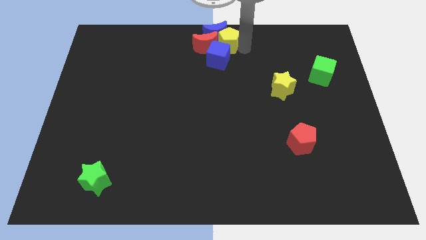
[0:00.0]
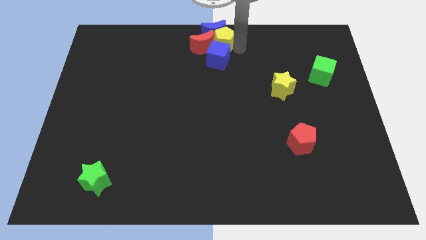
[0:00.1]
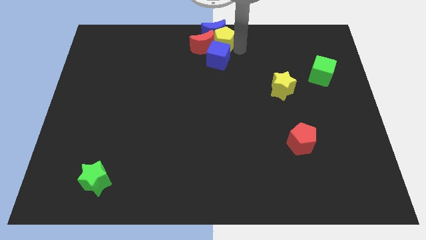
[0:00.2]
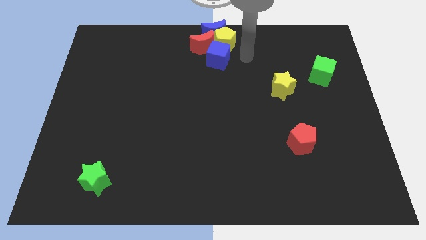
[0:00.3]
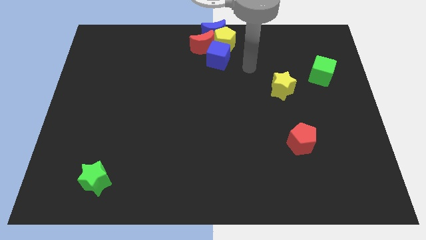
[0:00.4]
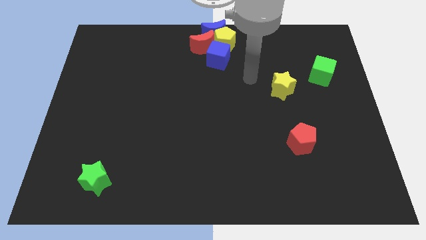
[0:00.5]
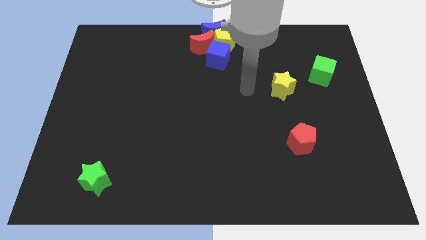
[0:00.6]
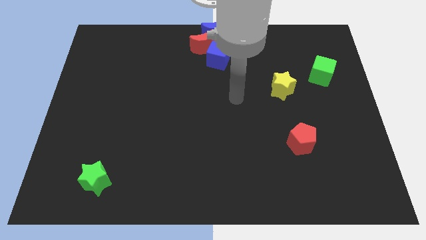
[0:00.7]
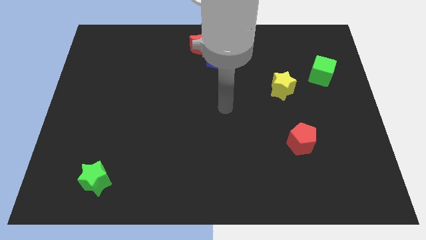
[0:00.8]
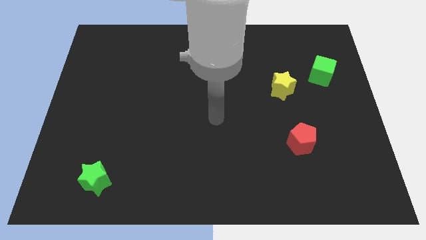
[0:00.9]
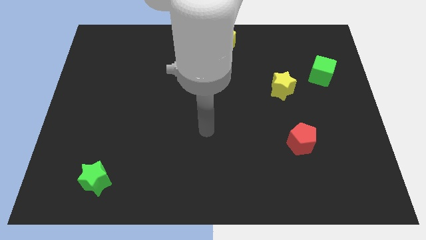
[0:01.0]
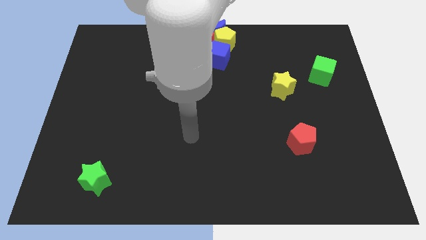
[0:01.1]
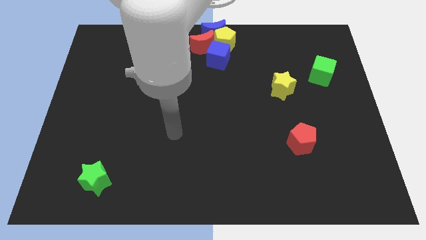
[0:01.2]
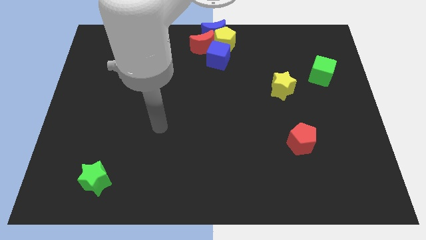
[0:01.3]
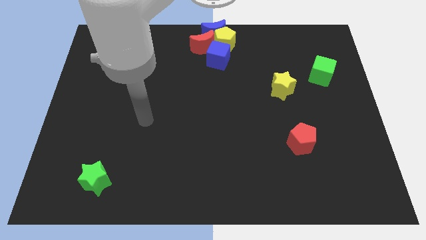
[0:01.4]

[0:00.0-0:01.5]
move your arm away from the yellow pentagon

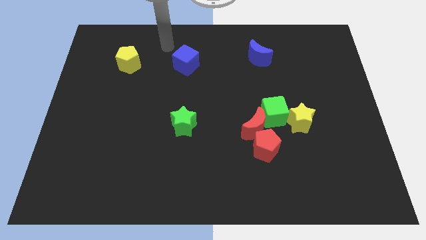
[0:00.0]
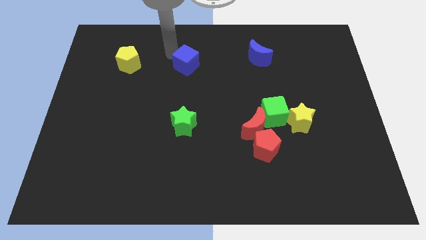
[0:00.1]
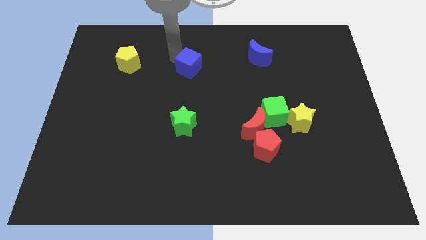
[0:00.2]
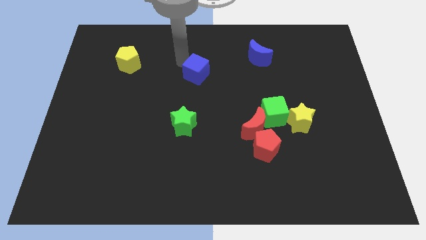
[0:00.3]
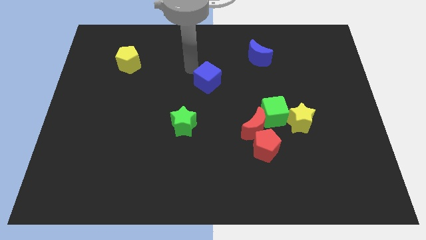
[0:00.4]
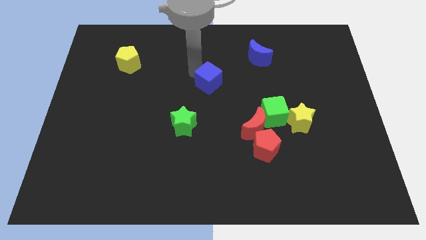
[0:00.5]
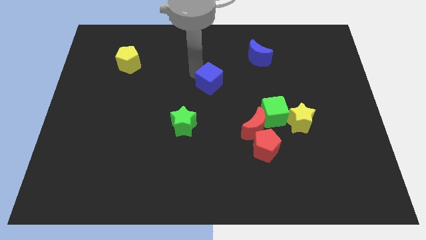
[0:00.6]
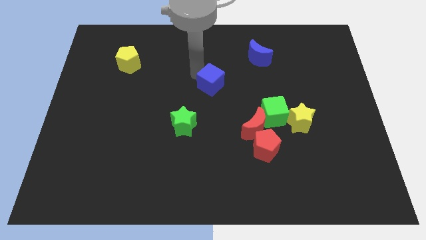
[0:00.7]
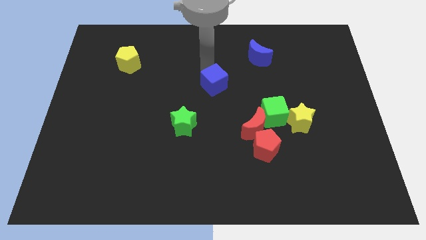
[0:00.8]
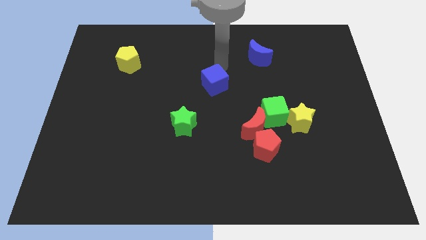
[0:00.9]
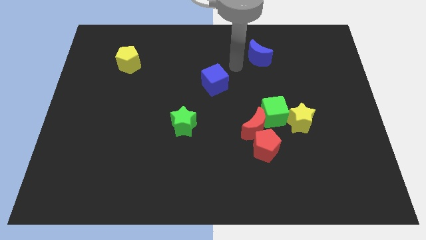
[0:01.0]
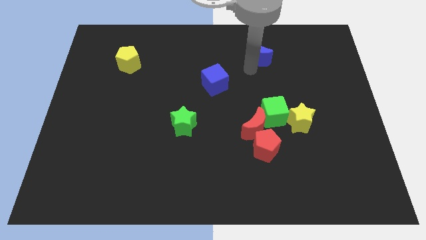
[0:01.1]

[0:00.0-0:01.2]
put the blue cube between the green star and blue moon

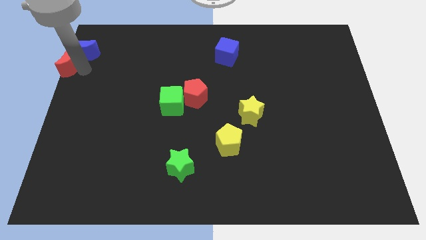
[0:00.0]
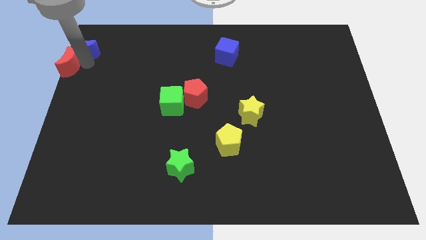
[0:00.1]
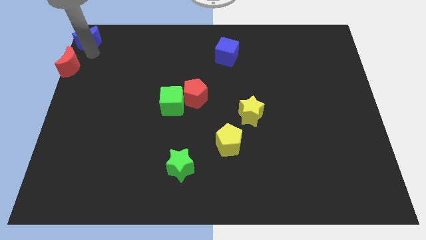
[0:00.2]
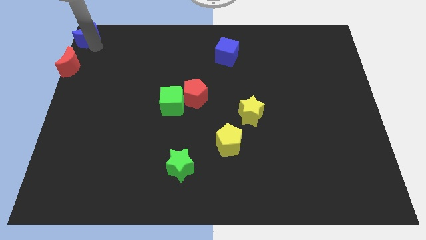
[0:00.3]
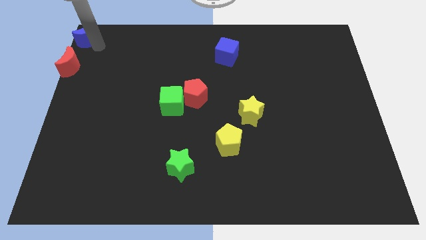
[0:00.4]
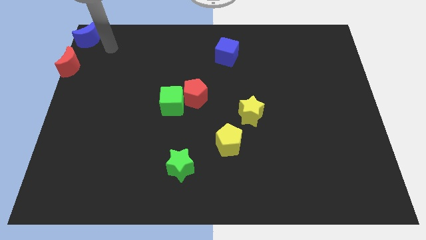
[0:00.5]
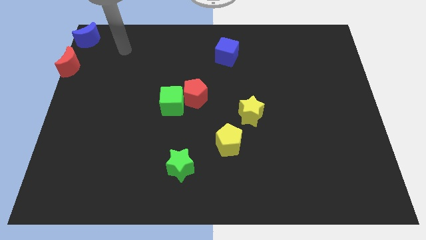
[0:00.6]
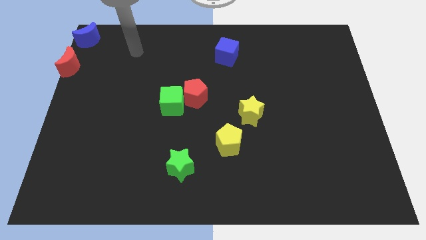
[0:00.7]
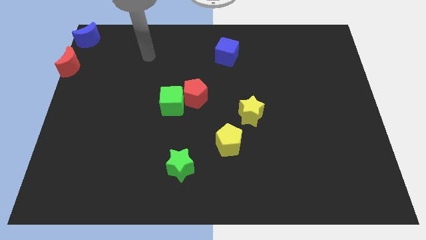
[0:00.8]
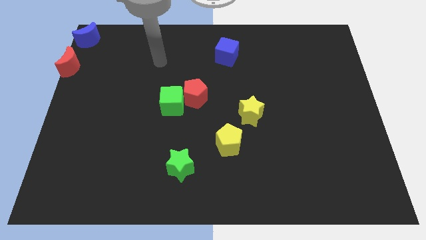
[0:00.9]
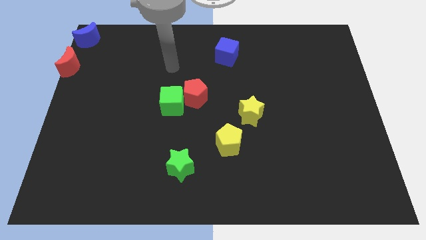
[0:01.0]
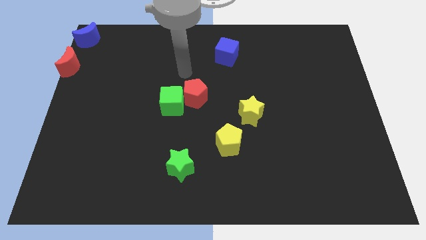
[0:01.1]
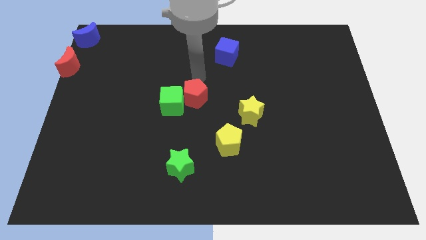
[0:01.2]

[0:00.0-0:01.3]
place the blue moon at the top left corner of the board

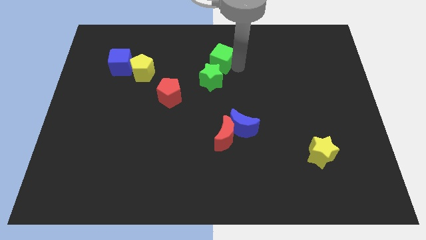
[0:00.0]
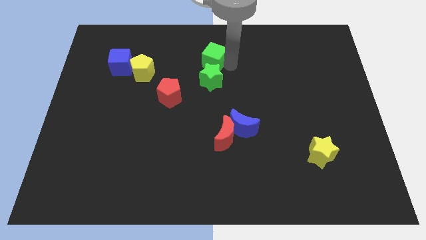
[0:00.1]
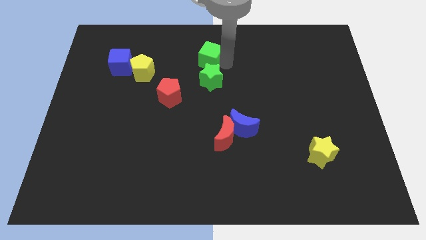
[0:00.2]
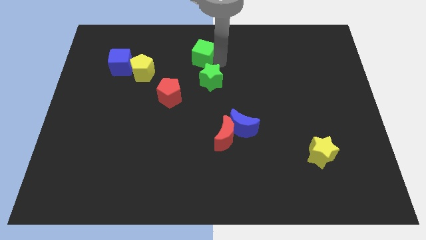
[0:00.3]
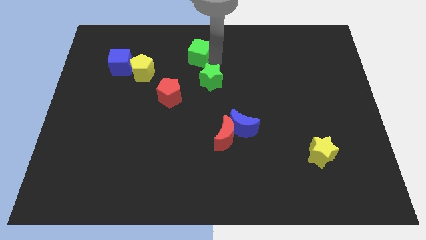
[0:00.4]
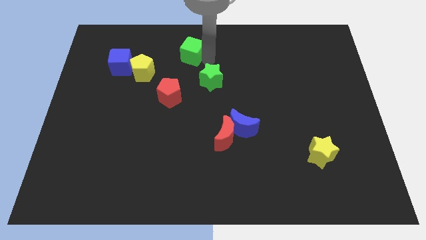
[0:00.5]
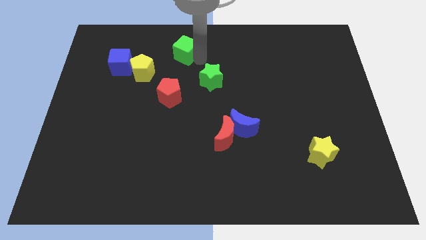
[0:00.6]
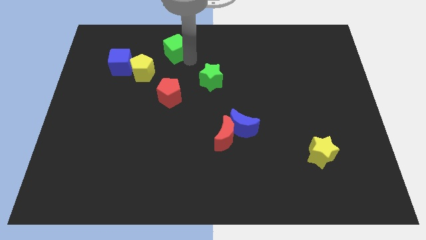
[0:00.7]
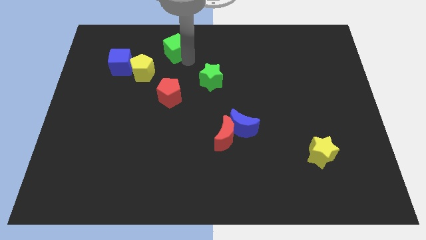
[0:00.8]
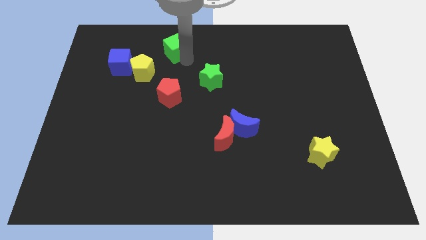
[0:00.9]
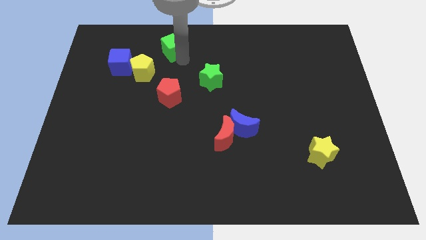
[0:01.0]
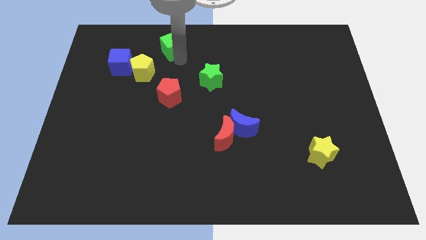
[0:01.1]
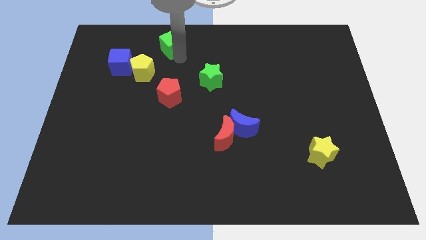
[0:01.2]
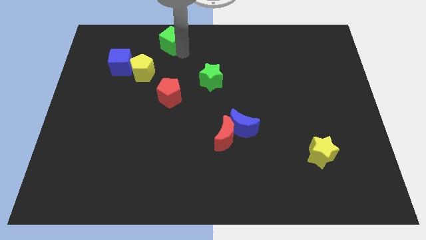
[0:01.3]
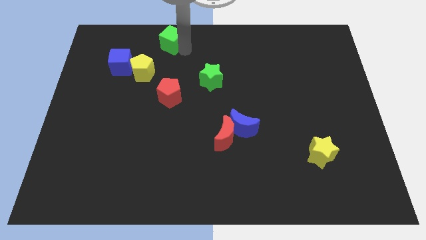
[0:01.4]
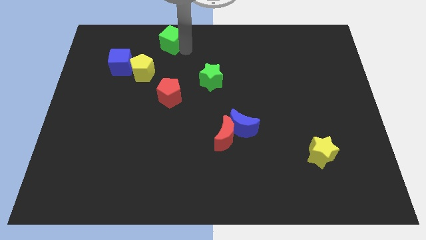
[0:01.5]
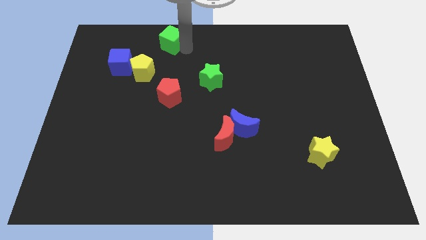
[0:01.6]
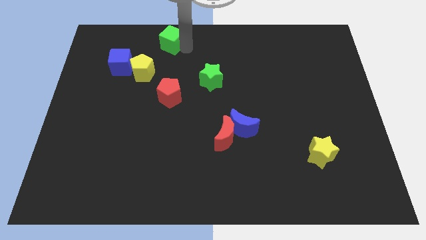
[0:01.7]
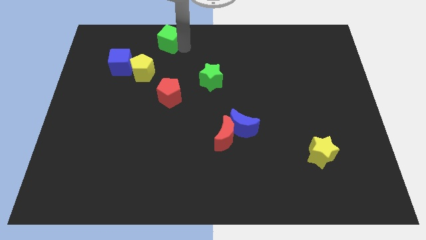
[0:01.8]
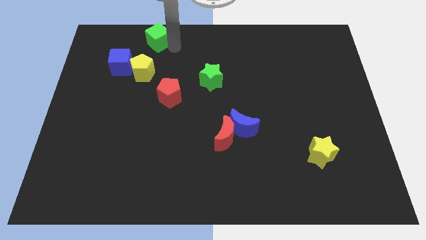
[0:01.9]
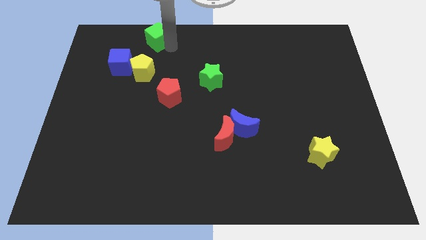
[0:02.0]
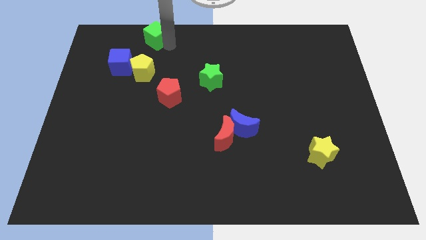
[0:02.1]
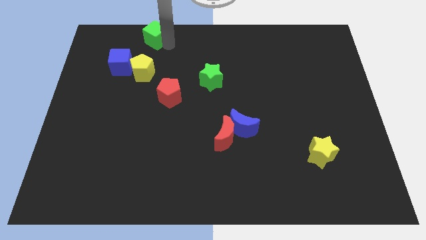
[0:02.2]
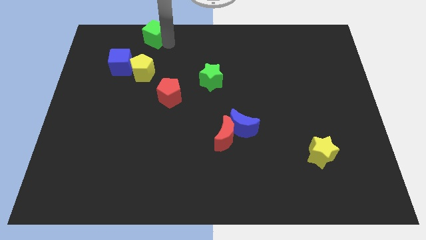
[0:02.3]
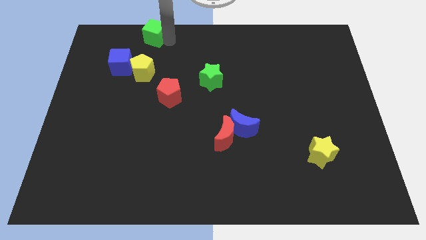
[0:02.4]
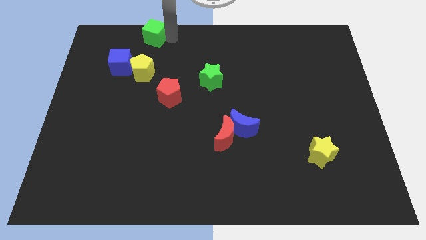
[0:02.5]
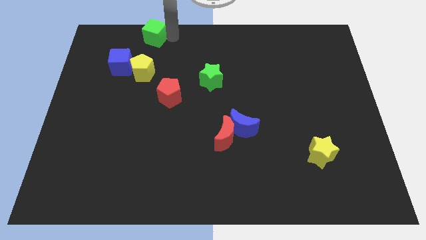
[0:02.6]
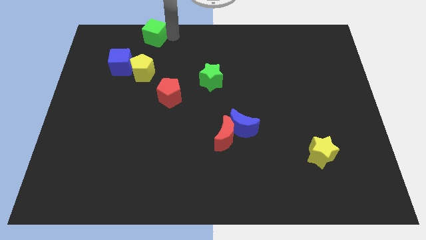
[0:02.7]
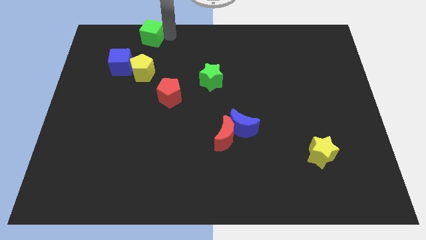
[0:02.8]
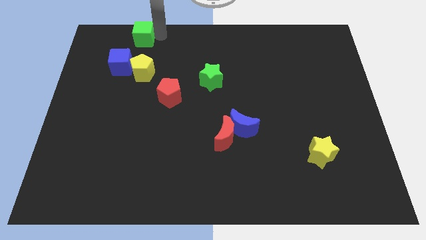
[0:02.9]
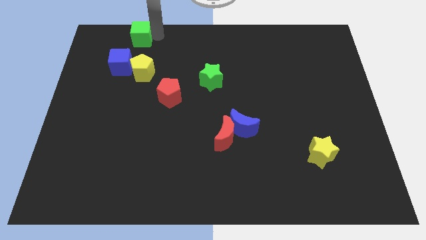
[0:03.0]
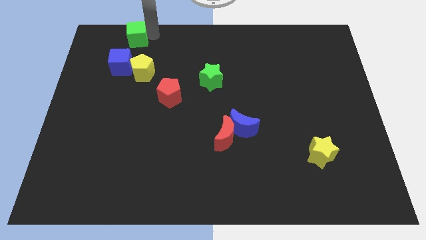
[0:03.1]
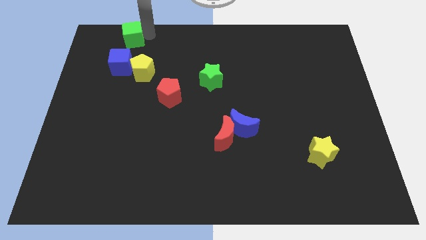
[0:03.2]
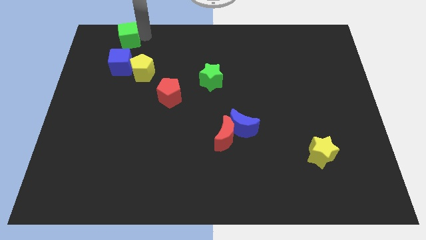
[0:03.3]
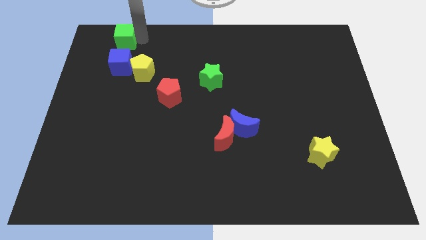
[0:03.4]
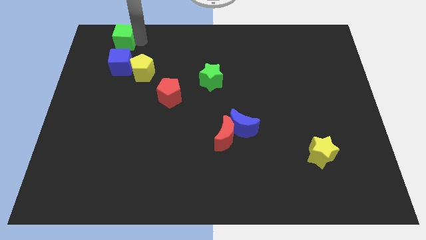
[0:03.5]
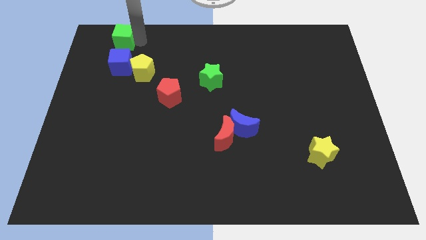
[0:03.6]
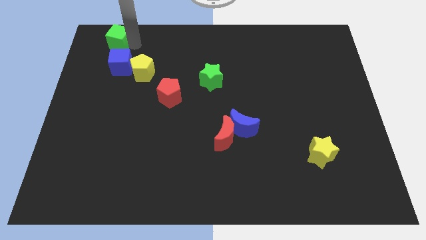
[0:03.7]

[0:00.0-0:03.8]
place green cube above blue cube

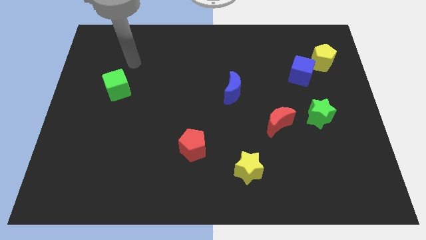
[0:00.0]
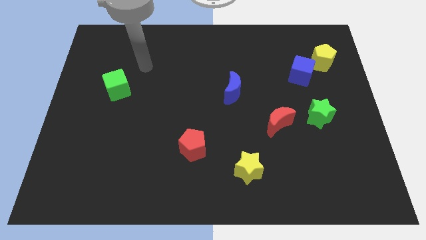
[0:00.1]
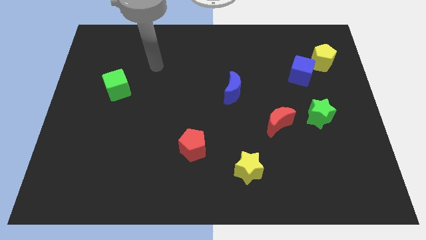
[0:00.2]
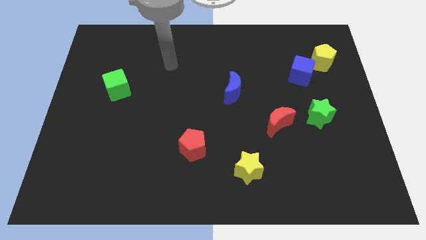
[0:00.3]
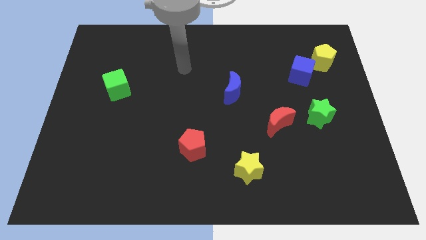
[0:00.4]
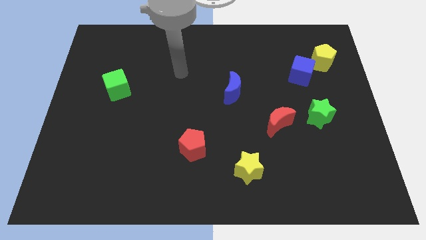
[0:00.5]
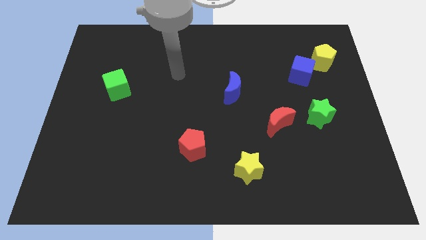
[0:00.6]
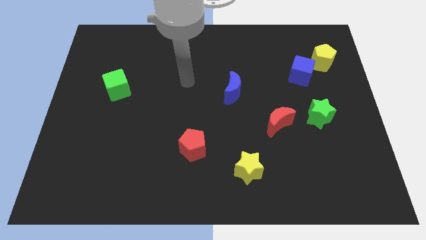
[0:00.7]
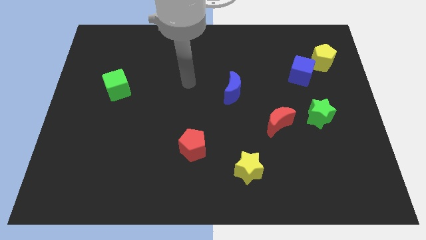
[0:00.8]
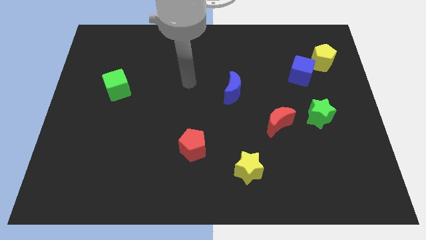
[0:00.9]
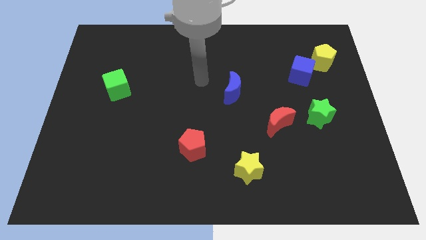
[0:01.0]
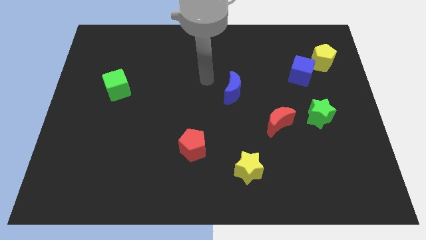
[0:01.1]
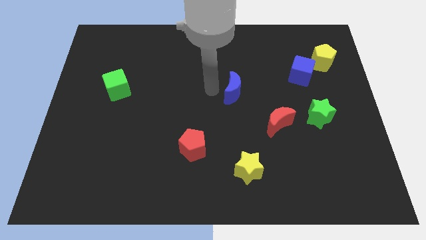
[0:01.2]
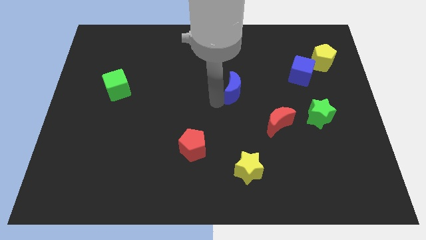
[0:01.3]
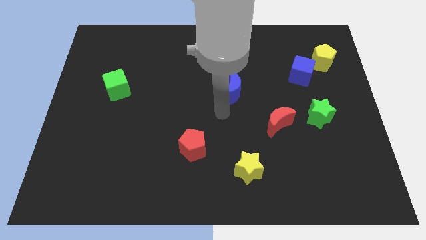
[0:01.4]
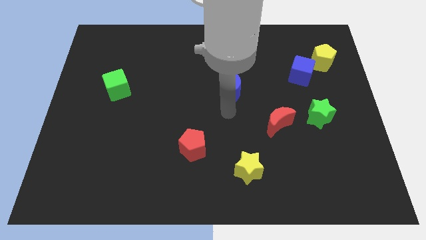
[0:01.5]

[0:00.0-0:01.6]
point your arm at the bottom of the blue crescent
